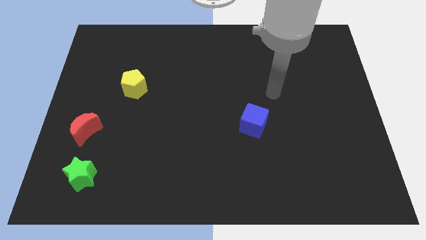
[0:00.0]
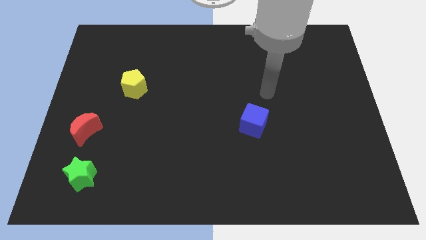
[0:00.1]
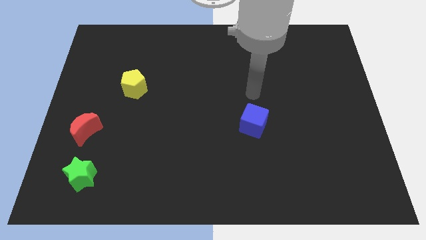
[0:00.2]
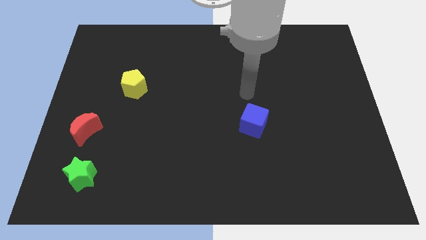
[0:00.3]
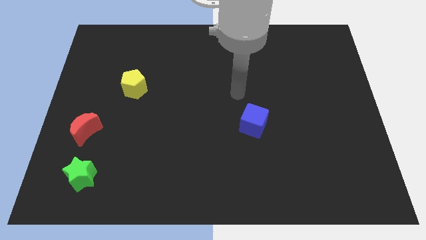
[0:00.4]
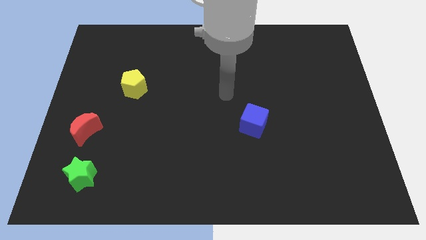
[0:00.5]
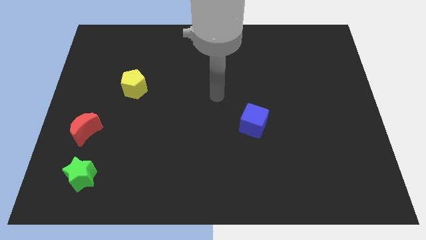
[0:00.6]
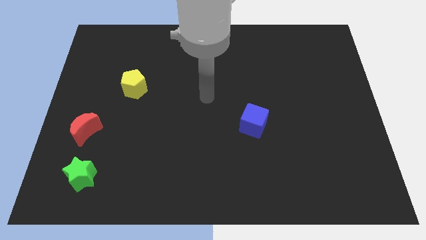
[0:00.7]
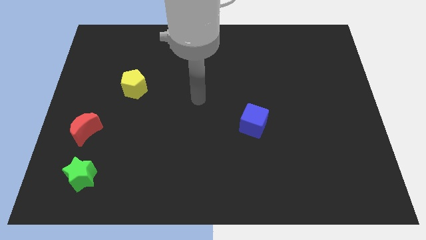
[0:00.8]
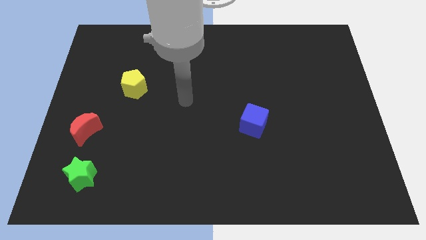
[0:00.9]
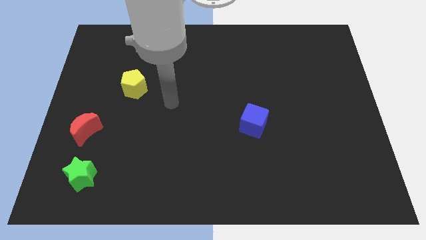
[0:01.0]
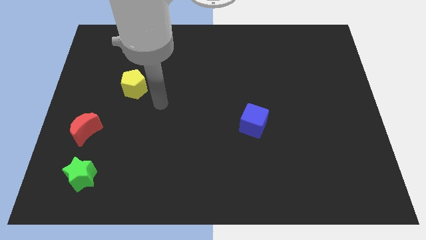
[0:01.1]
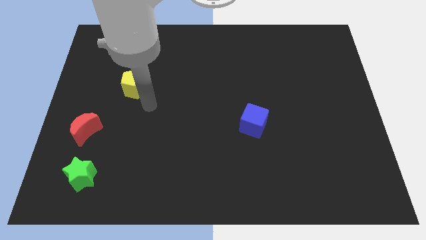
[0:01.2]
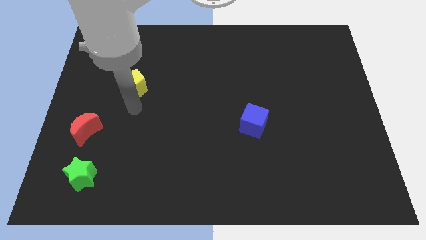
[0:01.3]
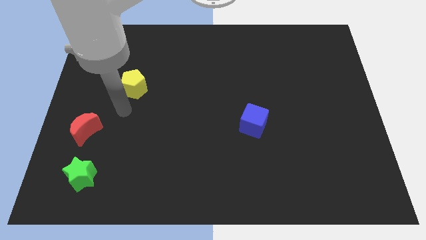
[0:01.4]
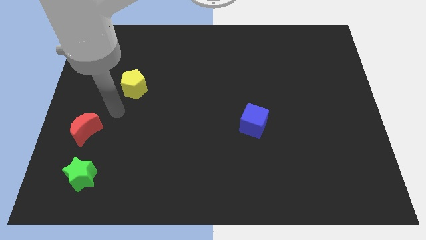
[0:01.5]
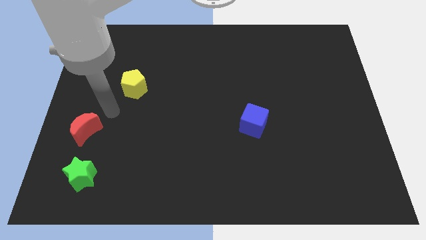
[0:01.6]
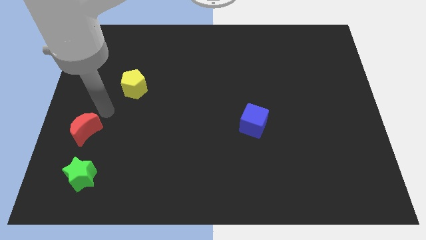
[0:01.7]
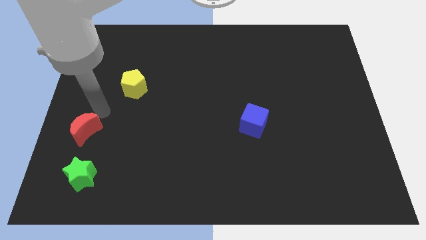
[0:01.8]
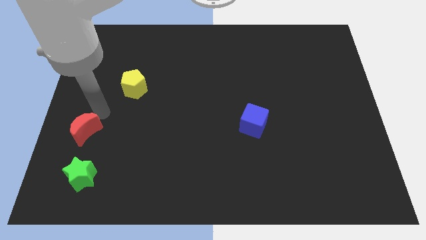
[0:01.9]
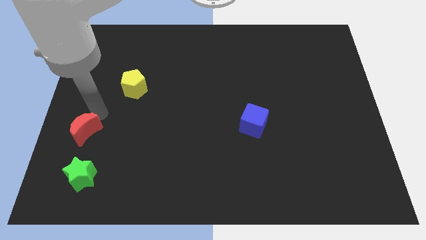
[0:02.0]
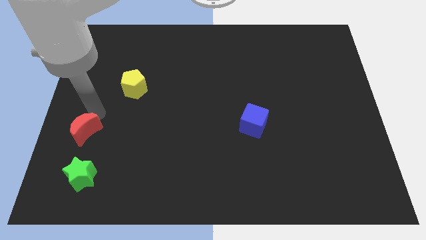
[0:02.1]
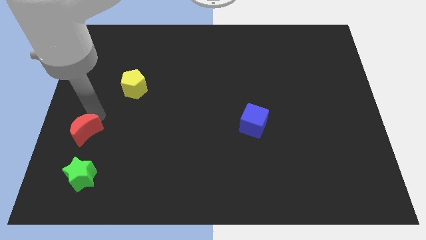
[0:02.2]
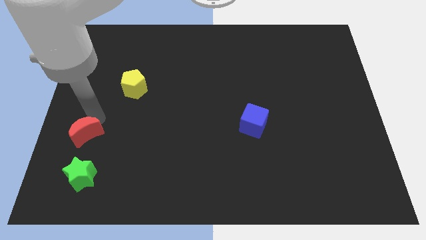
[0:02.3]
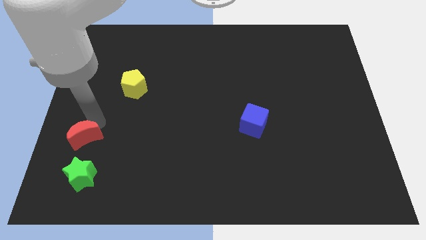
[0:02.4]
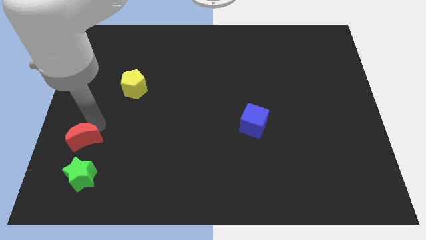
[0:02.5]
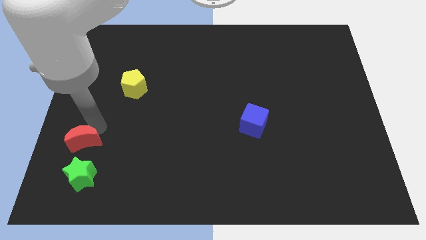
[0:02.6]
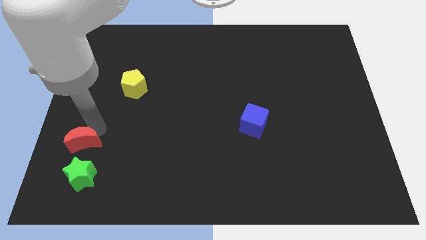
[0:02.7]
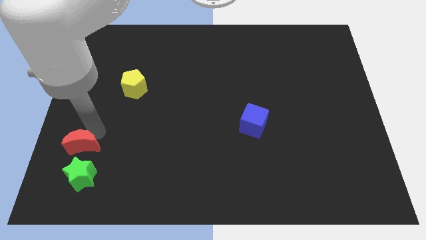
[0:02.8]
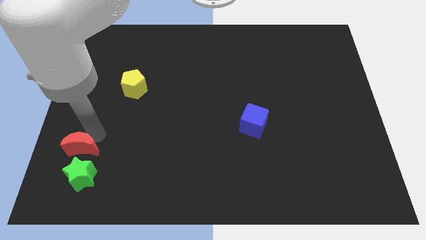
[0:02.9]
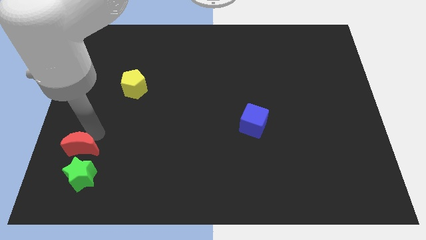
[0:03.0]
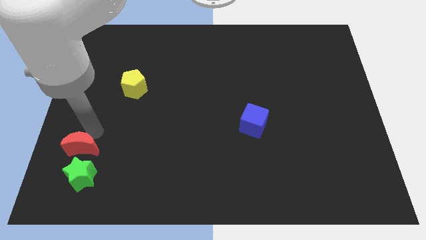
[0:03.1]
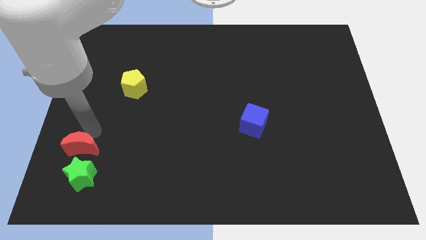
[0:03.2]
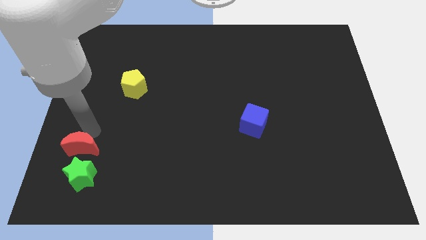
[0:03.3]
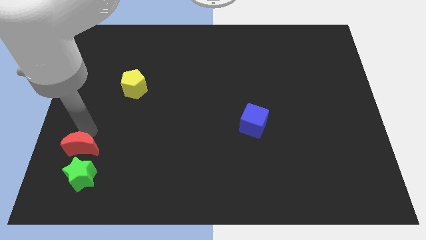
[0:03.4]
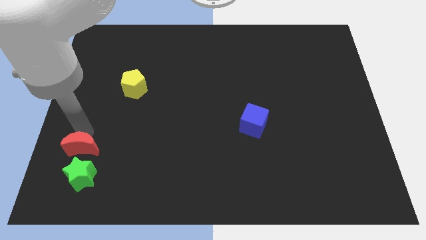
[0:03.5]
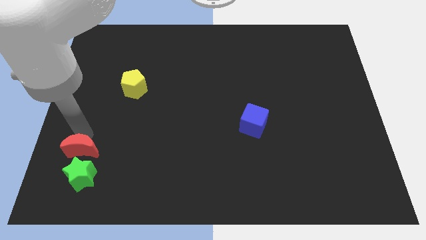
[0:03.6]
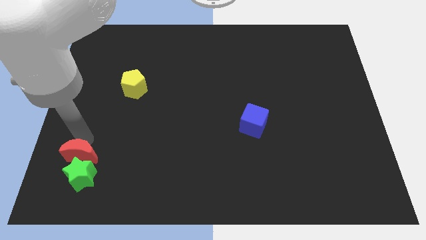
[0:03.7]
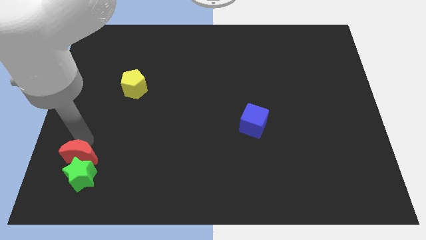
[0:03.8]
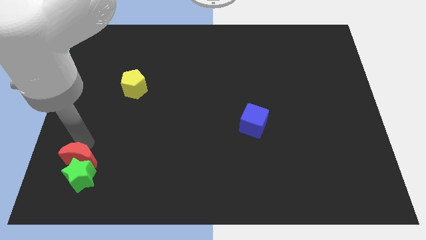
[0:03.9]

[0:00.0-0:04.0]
push the red moon towards the green block

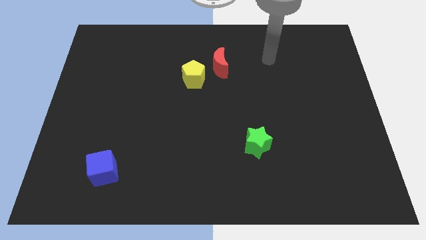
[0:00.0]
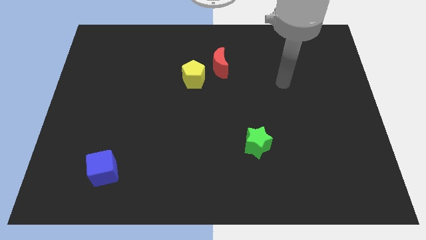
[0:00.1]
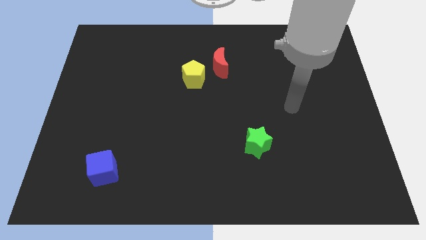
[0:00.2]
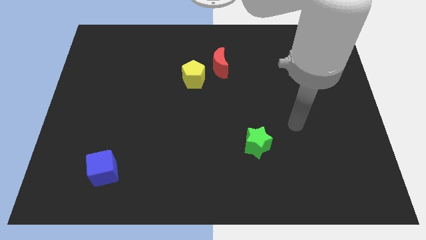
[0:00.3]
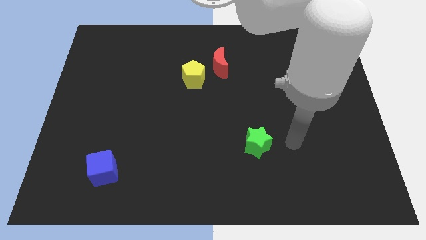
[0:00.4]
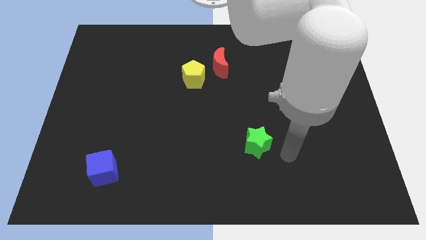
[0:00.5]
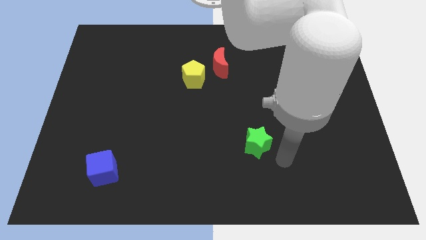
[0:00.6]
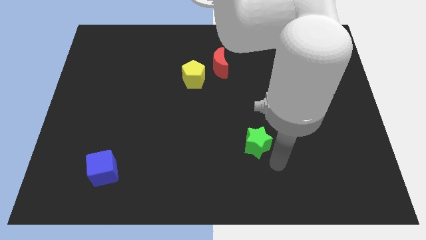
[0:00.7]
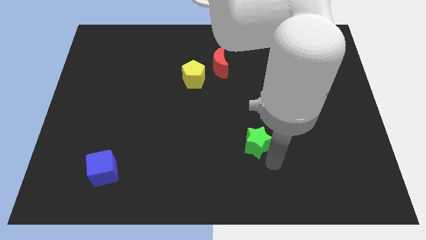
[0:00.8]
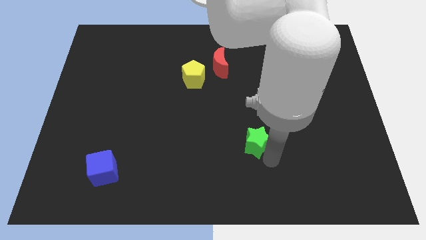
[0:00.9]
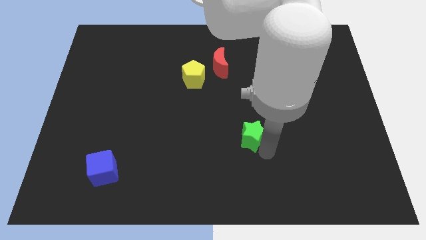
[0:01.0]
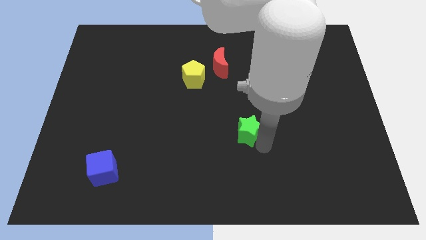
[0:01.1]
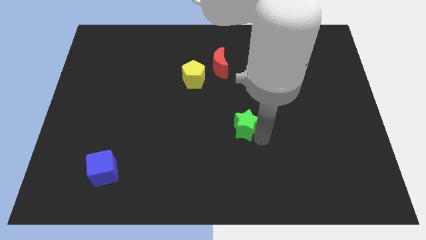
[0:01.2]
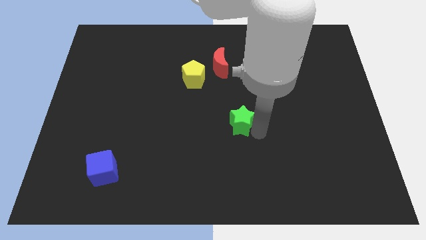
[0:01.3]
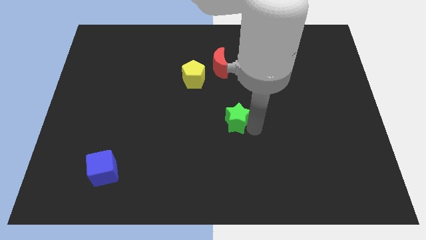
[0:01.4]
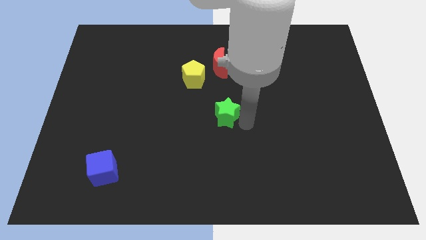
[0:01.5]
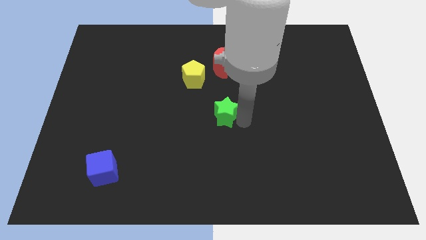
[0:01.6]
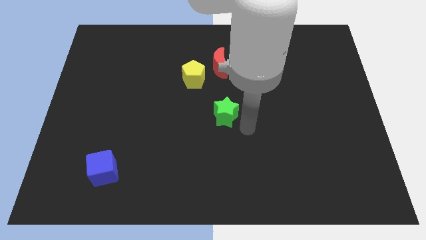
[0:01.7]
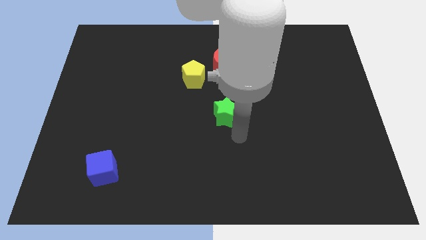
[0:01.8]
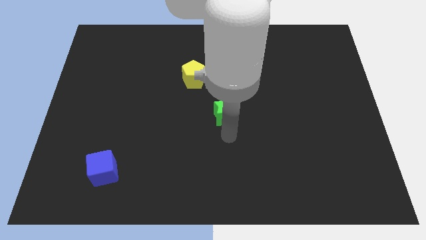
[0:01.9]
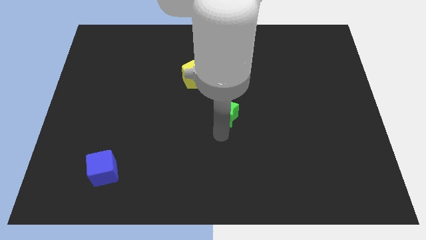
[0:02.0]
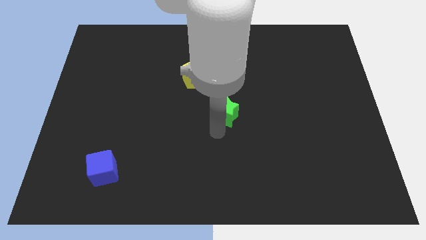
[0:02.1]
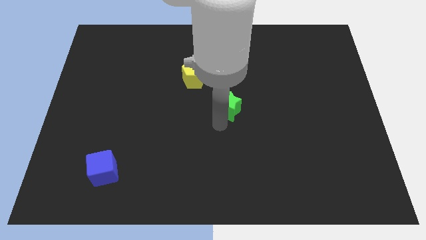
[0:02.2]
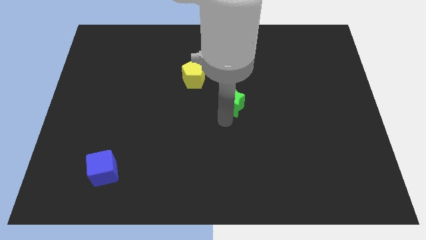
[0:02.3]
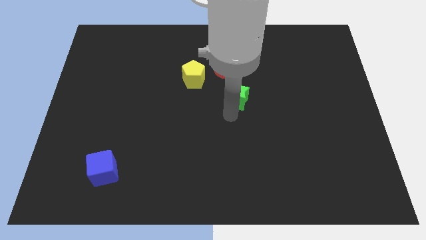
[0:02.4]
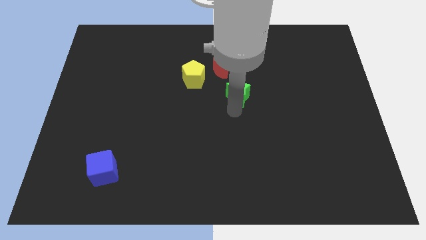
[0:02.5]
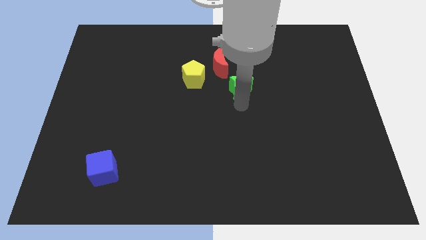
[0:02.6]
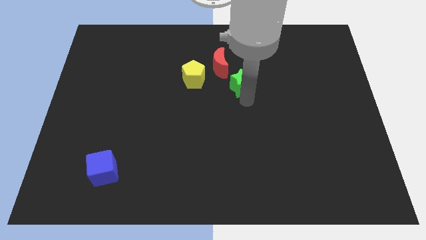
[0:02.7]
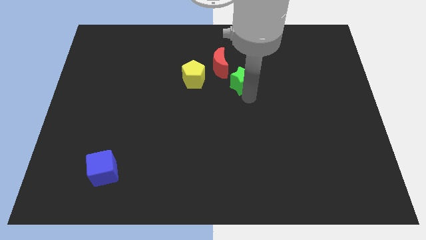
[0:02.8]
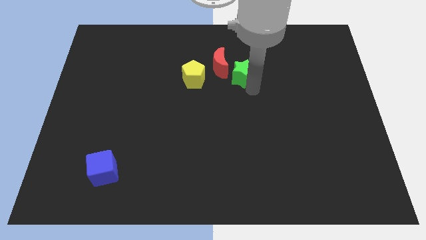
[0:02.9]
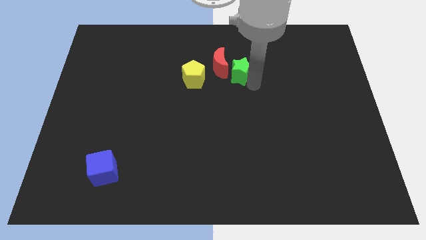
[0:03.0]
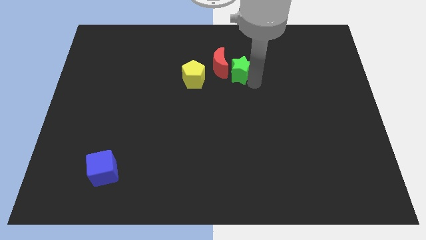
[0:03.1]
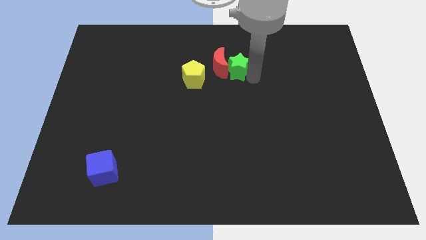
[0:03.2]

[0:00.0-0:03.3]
put the star to the red block

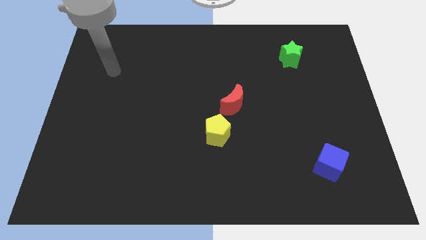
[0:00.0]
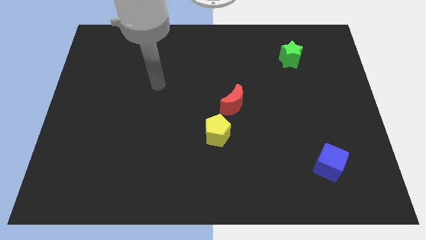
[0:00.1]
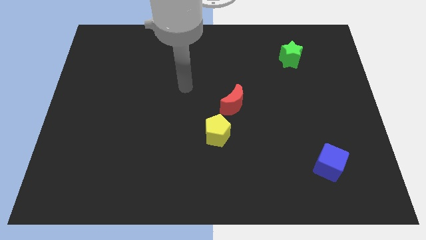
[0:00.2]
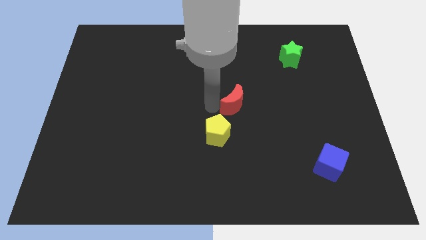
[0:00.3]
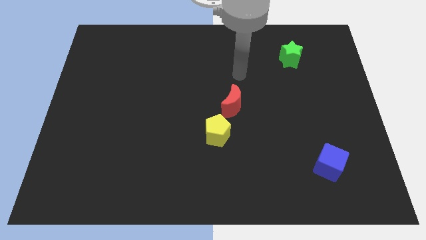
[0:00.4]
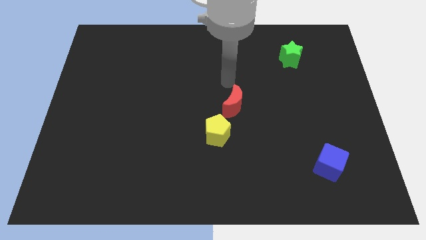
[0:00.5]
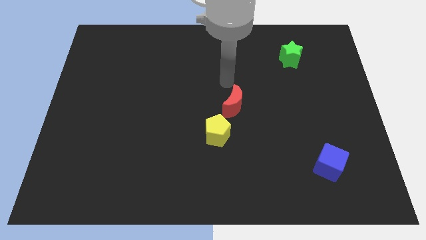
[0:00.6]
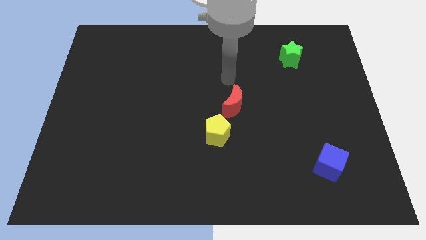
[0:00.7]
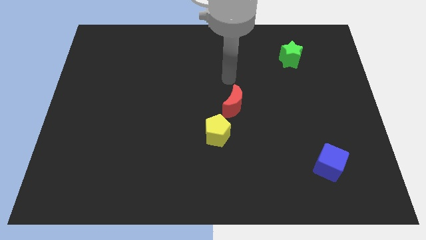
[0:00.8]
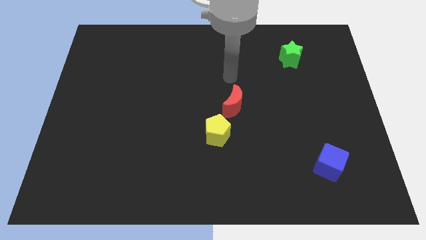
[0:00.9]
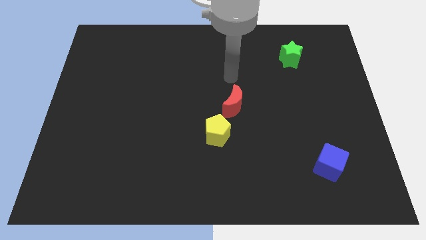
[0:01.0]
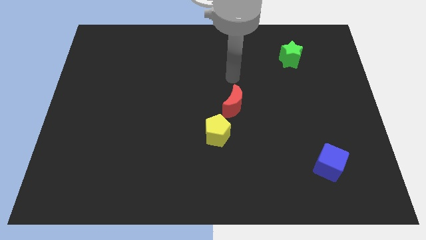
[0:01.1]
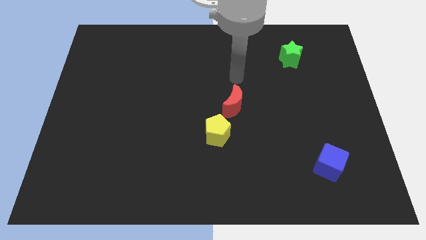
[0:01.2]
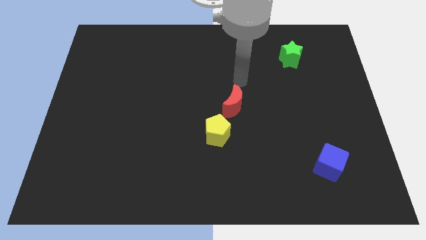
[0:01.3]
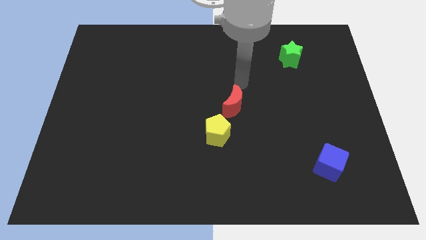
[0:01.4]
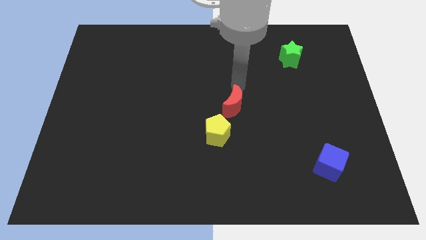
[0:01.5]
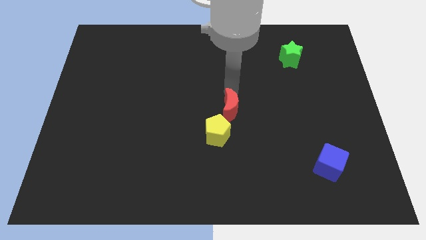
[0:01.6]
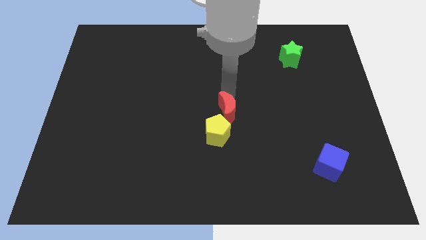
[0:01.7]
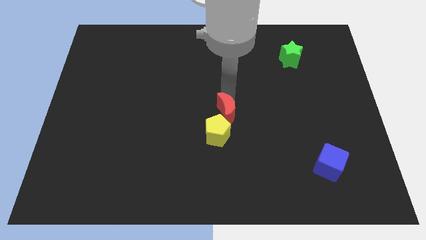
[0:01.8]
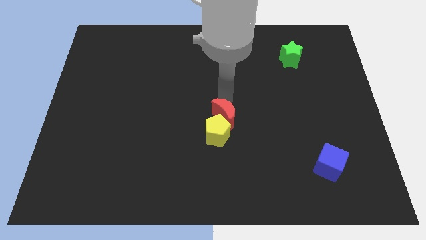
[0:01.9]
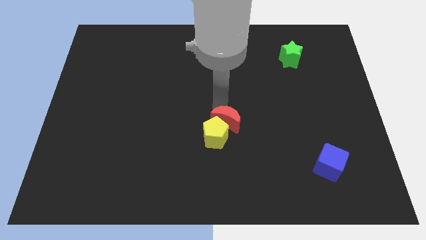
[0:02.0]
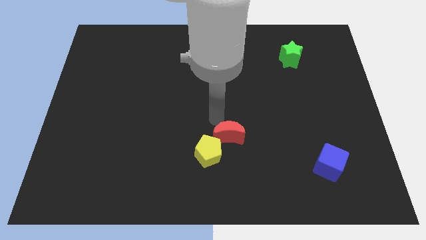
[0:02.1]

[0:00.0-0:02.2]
push the moon towards the pentagon
